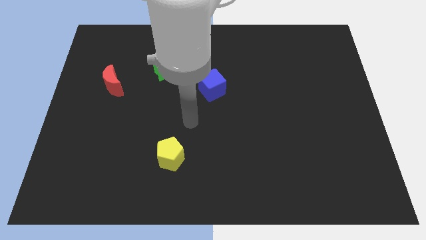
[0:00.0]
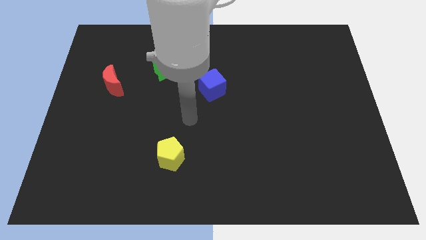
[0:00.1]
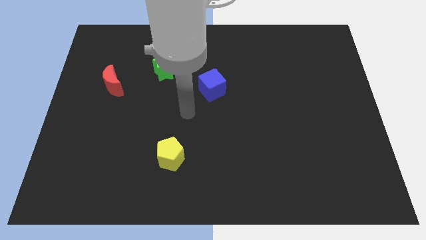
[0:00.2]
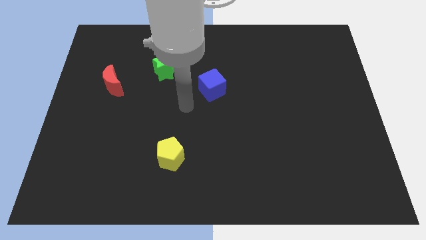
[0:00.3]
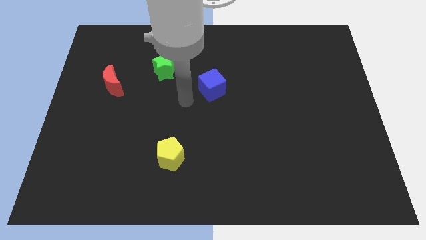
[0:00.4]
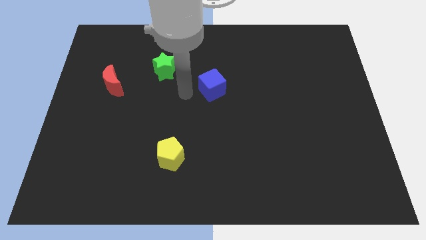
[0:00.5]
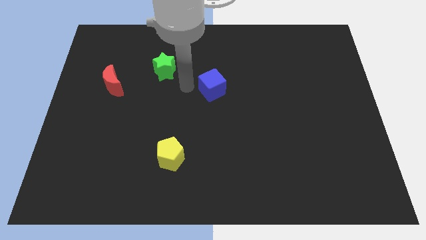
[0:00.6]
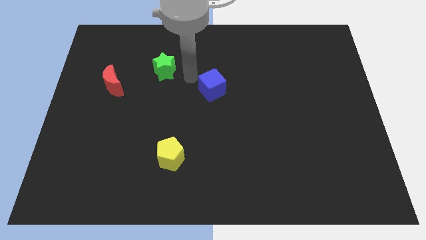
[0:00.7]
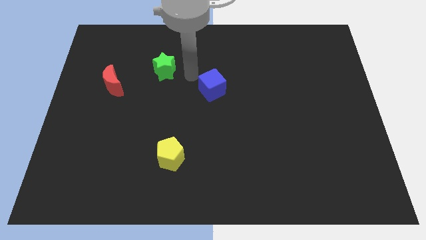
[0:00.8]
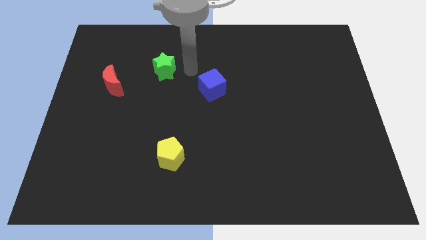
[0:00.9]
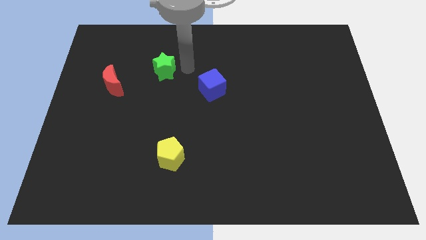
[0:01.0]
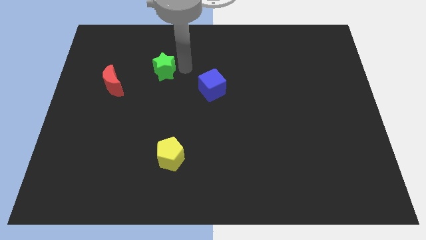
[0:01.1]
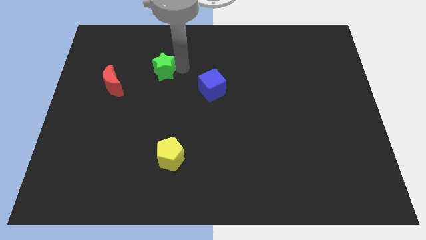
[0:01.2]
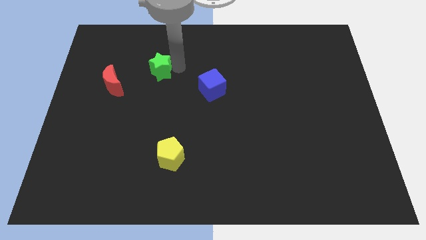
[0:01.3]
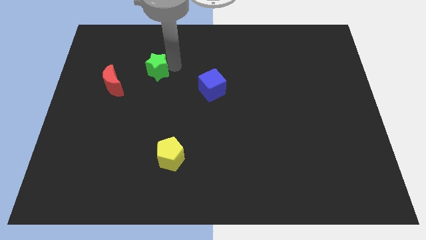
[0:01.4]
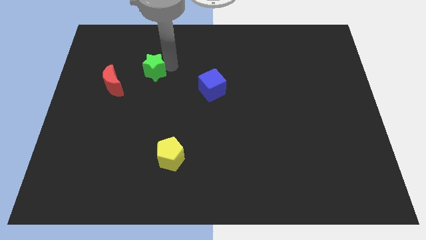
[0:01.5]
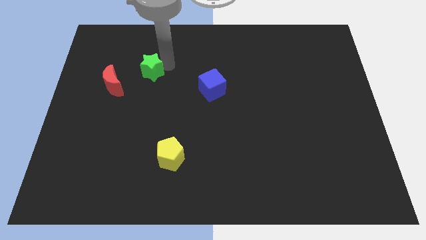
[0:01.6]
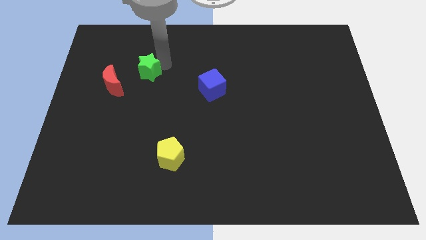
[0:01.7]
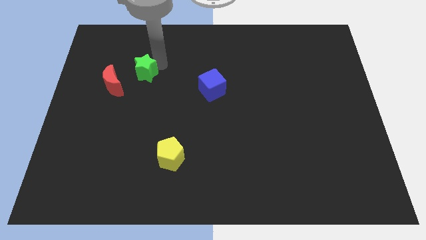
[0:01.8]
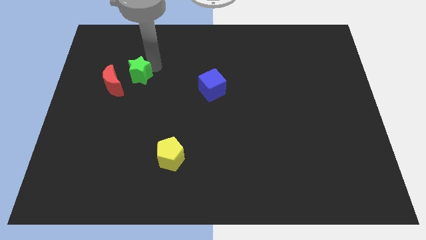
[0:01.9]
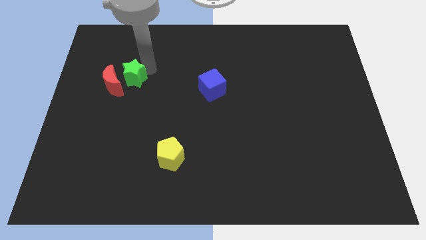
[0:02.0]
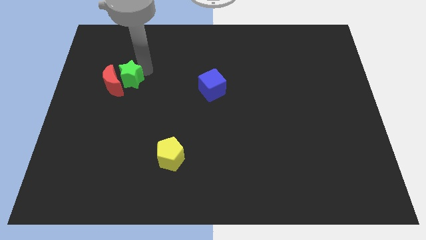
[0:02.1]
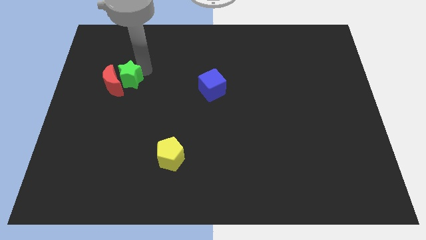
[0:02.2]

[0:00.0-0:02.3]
move the star towards the red block

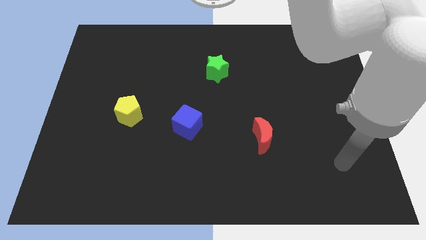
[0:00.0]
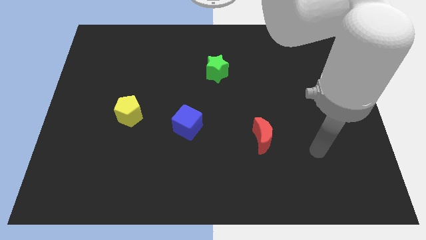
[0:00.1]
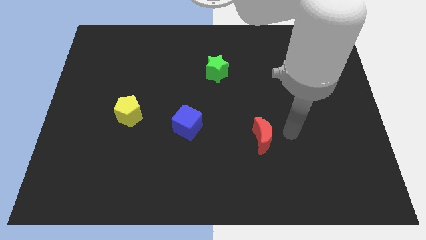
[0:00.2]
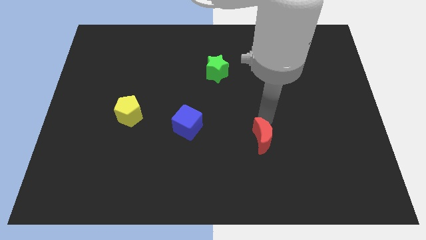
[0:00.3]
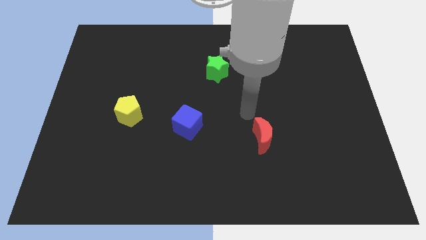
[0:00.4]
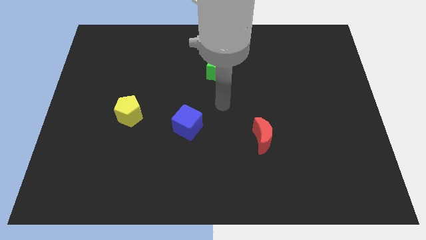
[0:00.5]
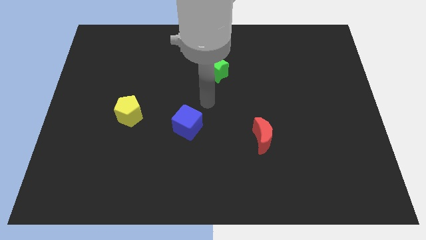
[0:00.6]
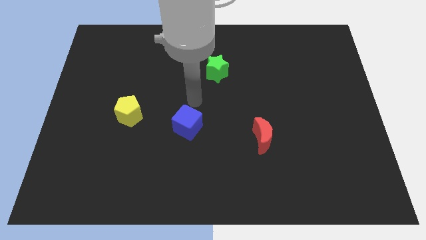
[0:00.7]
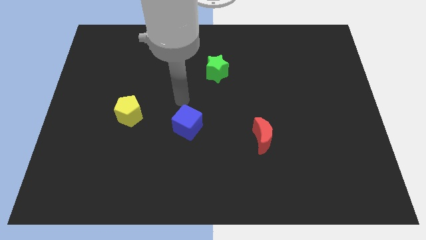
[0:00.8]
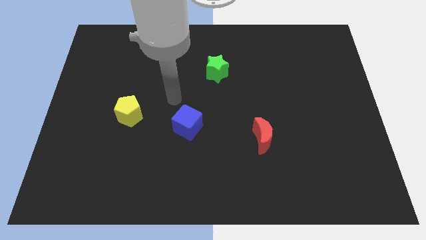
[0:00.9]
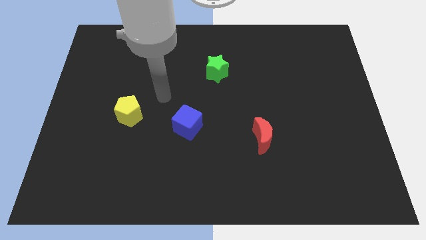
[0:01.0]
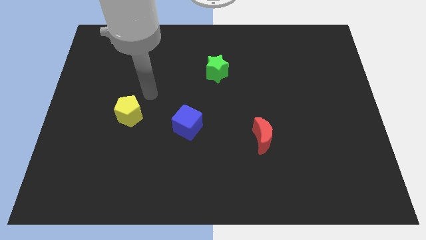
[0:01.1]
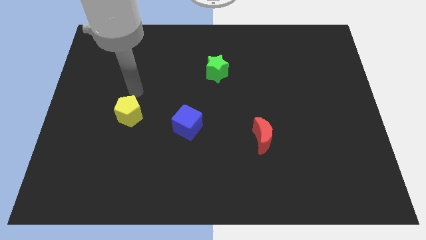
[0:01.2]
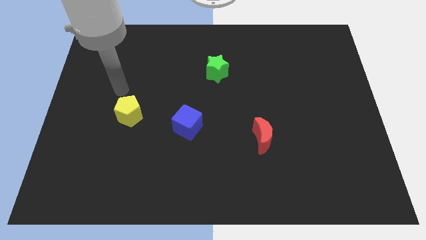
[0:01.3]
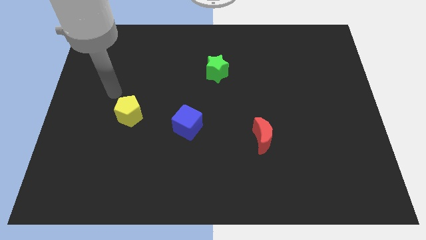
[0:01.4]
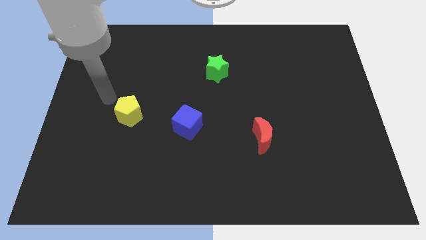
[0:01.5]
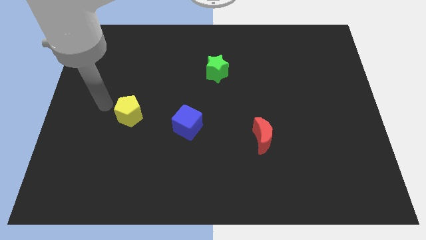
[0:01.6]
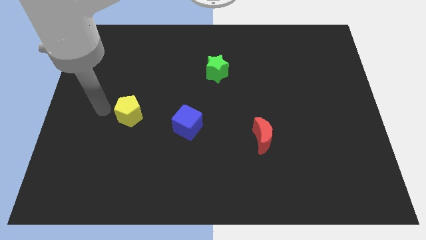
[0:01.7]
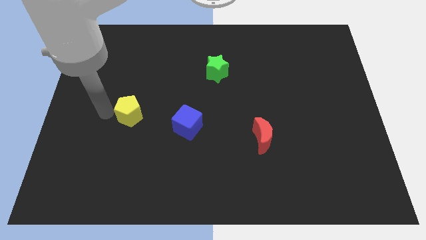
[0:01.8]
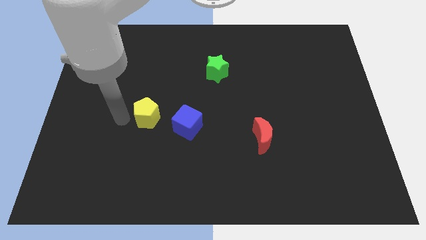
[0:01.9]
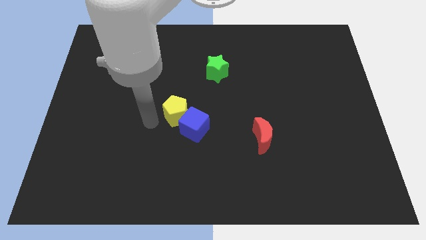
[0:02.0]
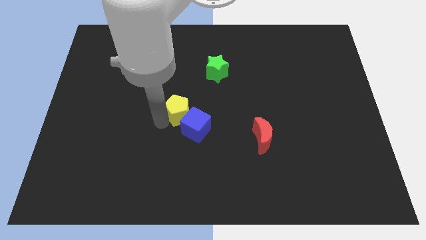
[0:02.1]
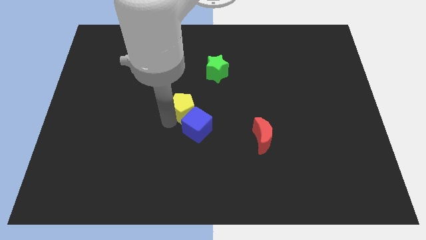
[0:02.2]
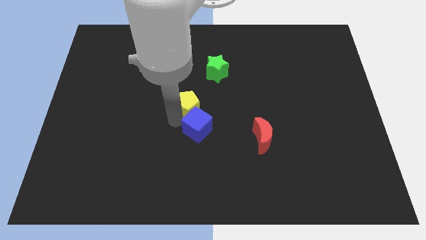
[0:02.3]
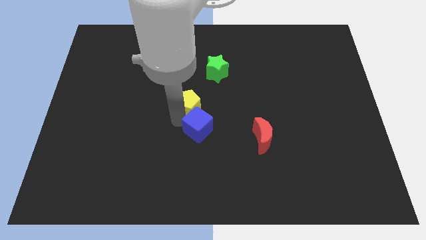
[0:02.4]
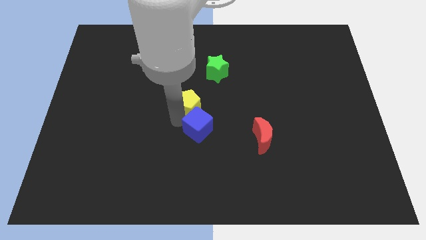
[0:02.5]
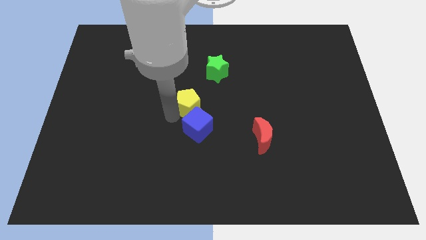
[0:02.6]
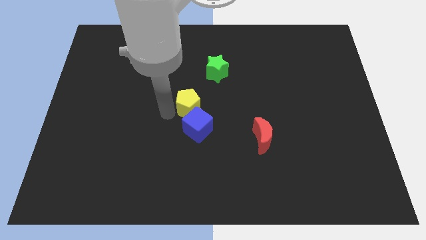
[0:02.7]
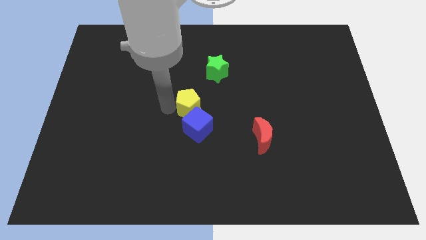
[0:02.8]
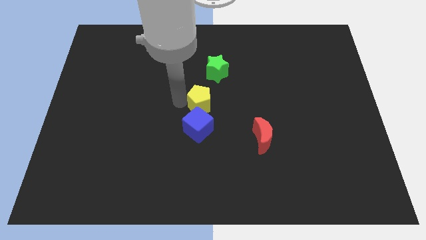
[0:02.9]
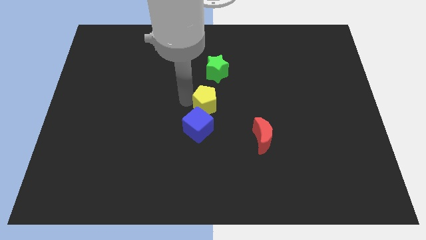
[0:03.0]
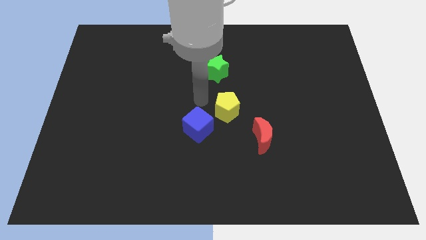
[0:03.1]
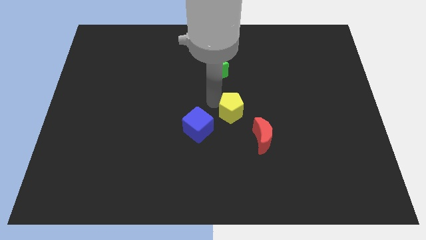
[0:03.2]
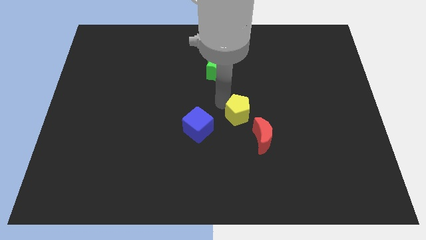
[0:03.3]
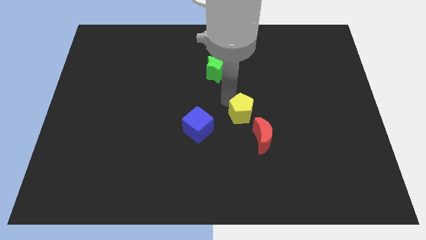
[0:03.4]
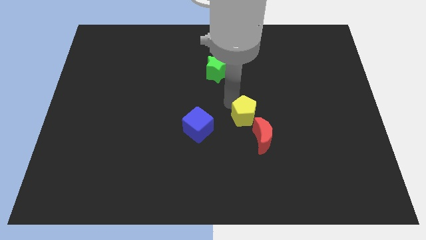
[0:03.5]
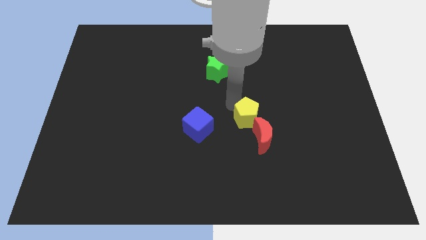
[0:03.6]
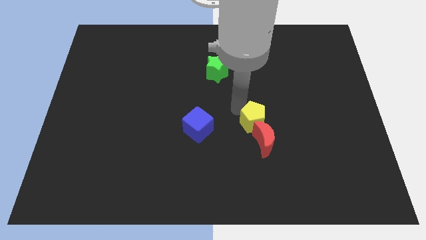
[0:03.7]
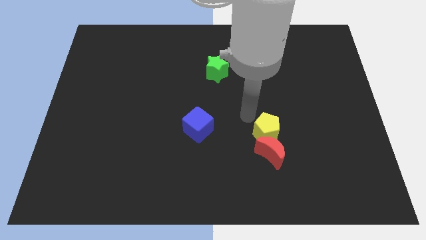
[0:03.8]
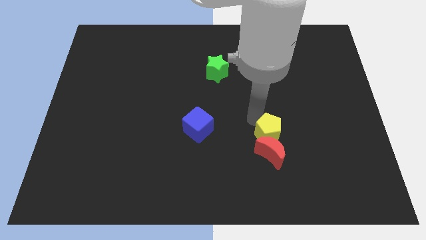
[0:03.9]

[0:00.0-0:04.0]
move the yellow block close to the red moon

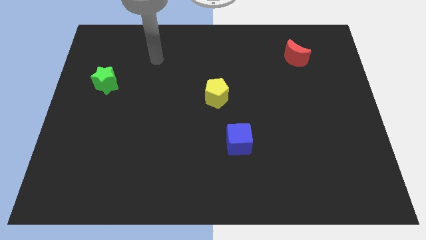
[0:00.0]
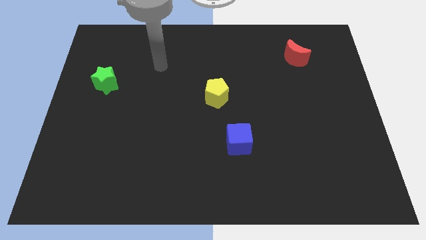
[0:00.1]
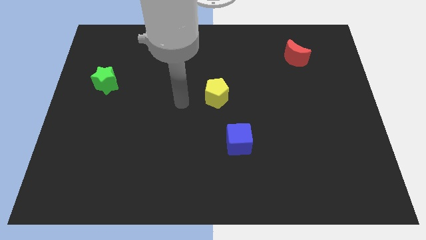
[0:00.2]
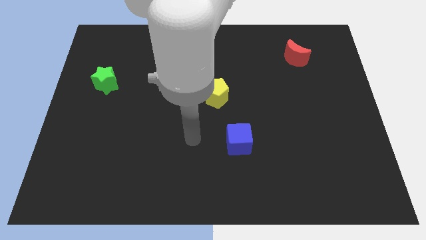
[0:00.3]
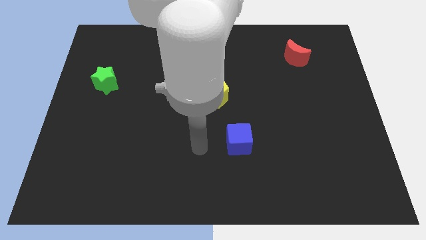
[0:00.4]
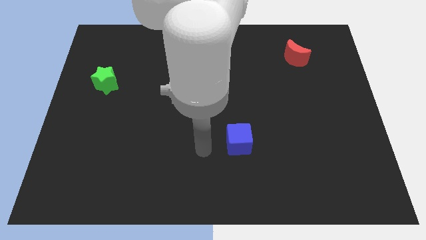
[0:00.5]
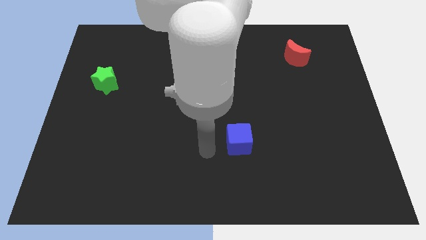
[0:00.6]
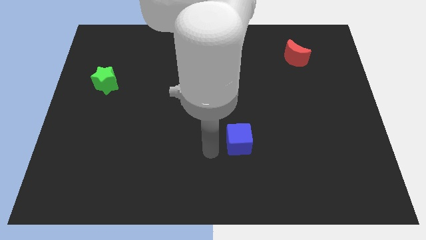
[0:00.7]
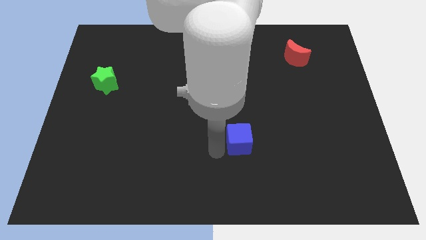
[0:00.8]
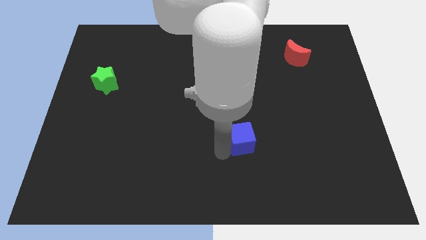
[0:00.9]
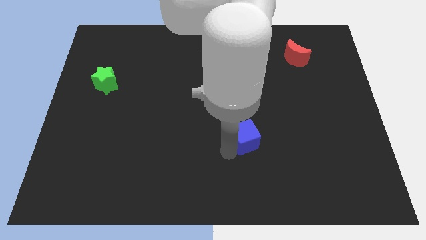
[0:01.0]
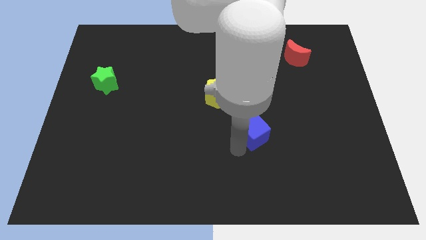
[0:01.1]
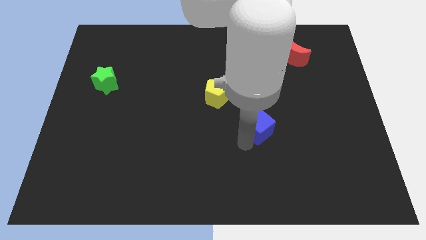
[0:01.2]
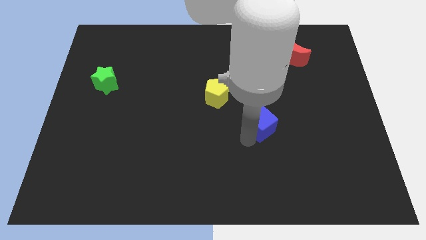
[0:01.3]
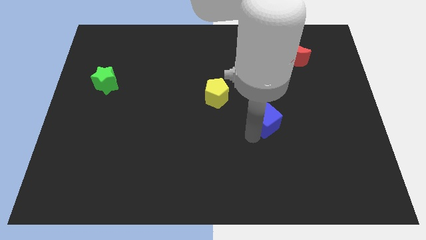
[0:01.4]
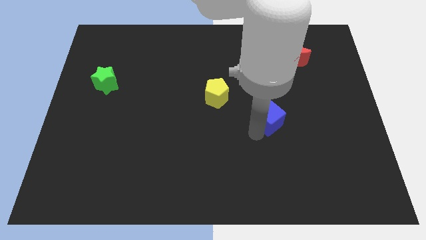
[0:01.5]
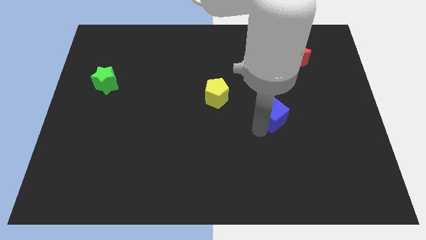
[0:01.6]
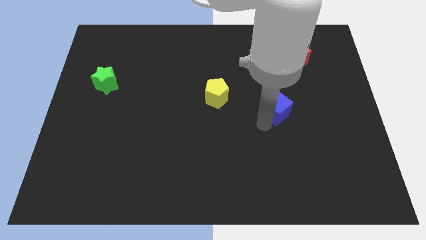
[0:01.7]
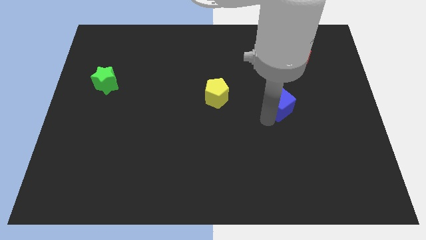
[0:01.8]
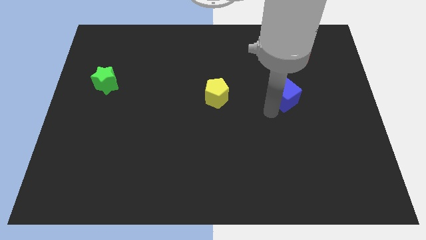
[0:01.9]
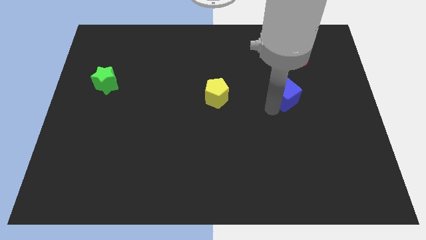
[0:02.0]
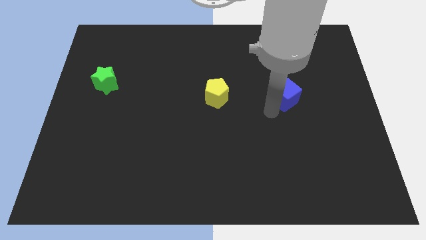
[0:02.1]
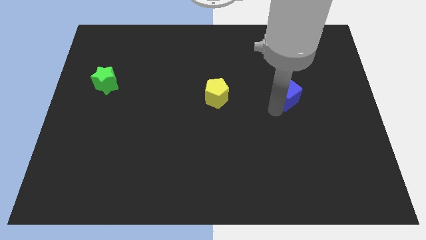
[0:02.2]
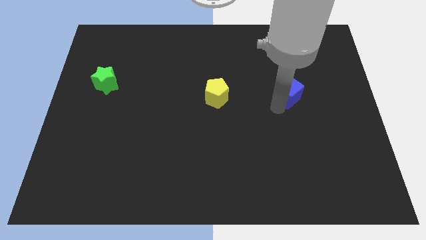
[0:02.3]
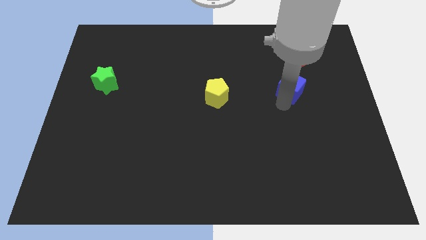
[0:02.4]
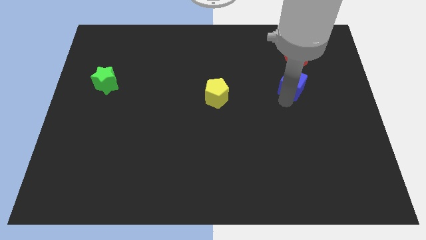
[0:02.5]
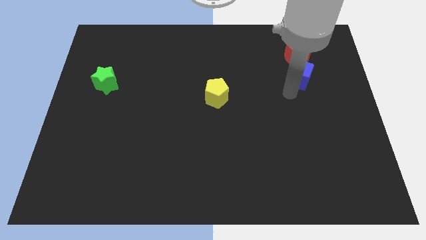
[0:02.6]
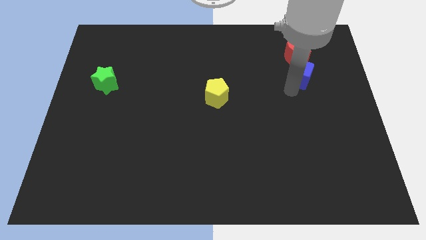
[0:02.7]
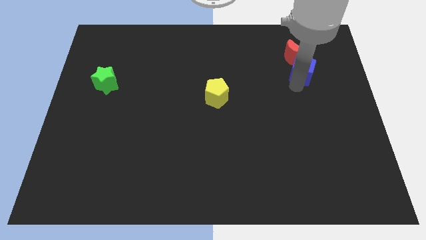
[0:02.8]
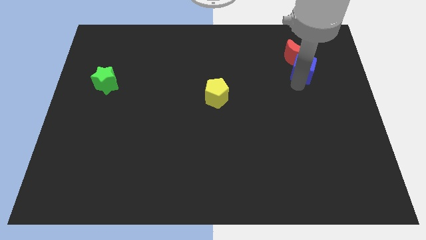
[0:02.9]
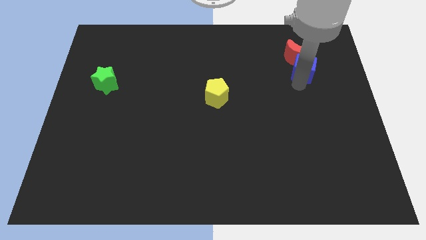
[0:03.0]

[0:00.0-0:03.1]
push the cube next to the red moon
